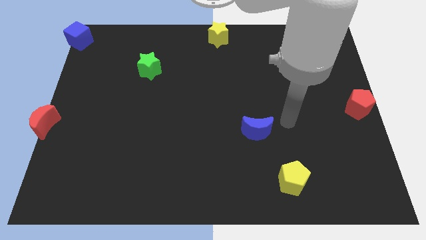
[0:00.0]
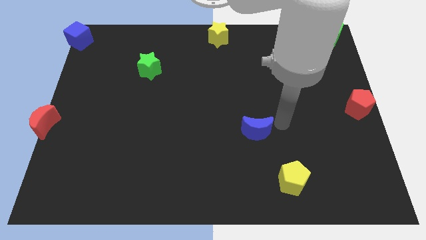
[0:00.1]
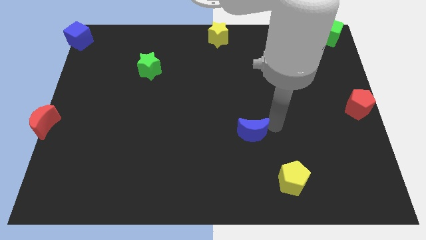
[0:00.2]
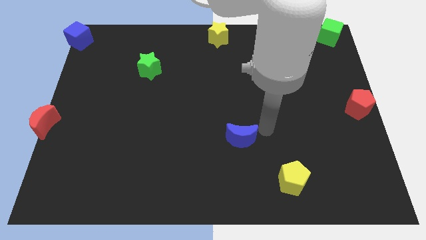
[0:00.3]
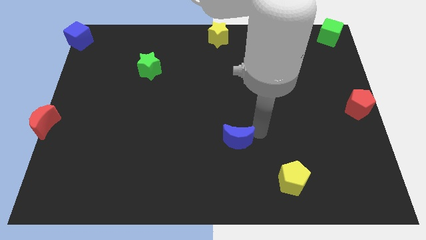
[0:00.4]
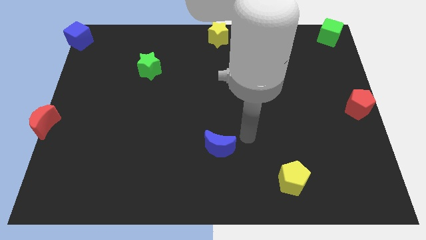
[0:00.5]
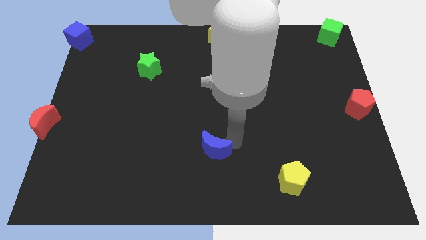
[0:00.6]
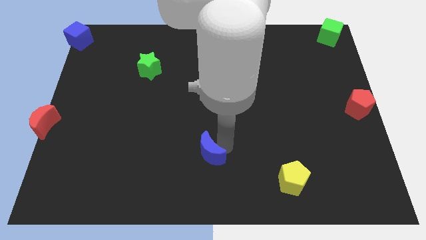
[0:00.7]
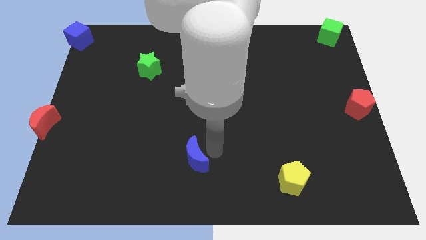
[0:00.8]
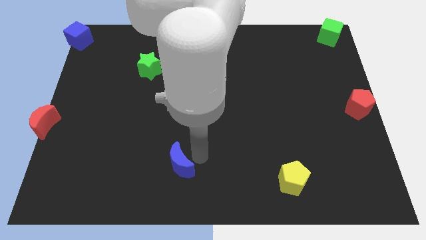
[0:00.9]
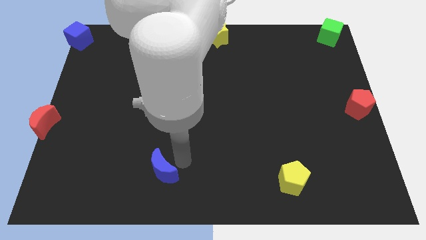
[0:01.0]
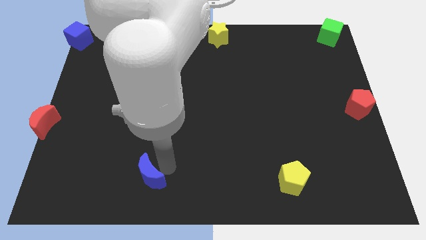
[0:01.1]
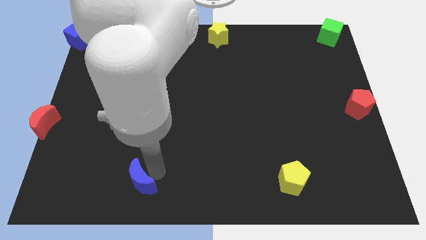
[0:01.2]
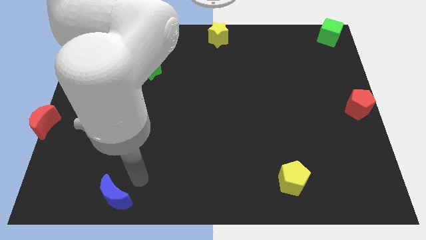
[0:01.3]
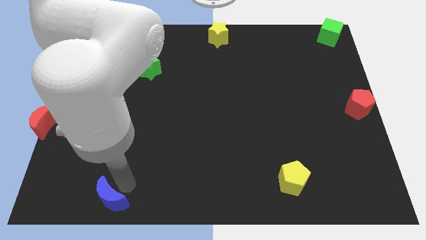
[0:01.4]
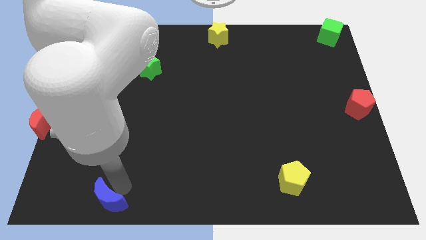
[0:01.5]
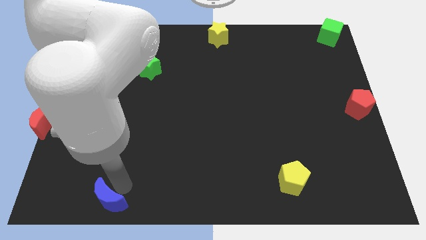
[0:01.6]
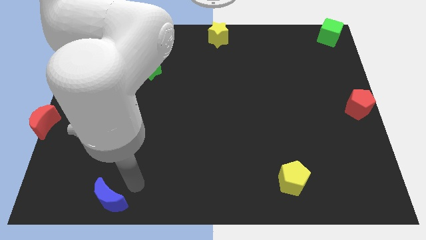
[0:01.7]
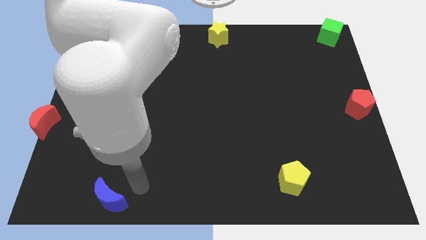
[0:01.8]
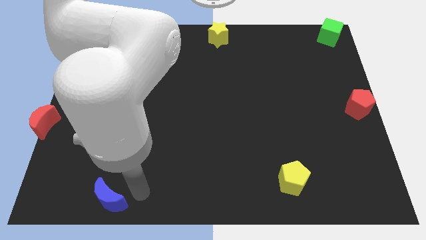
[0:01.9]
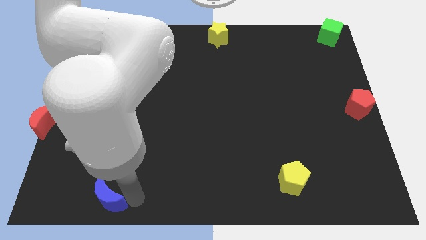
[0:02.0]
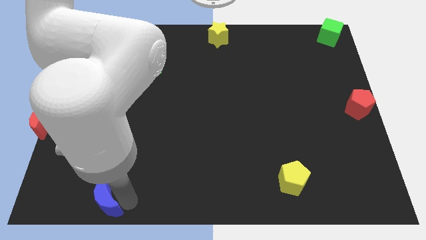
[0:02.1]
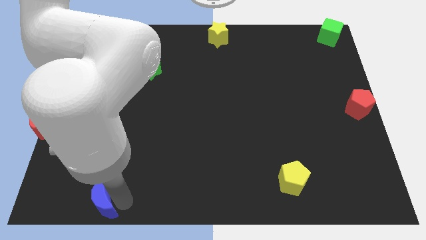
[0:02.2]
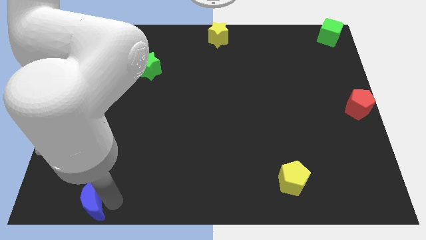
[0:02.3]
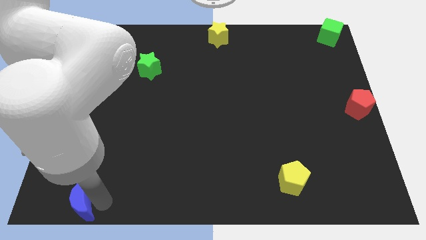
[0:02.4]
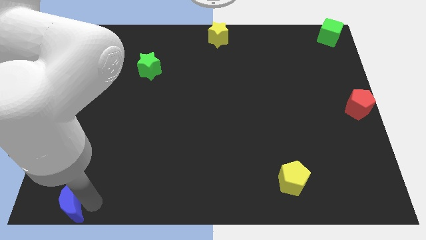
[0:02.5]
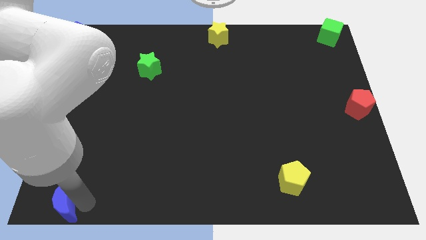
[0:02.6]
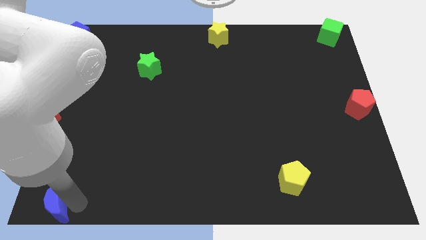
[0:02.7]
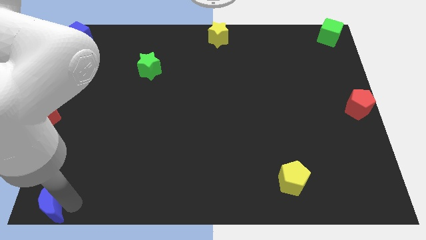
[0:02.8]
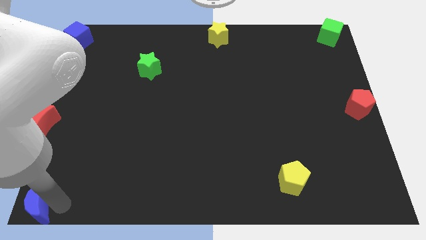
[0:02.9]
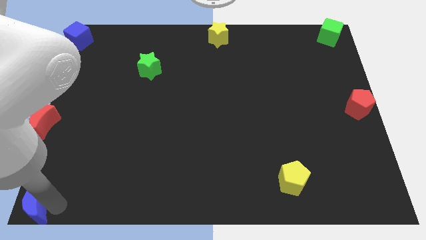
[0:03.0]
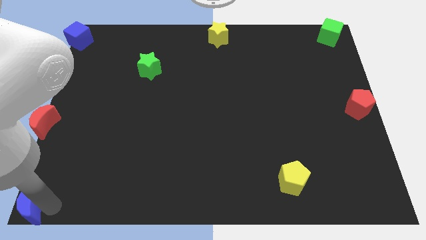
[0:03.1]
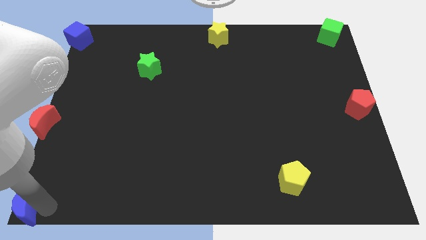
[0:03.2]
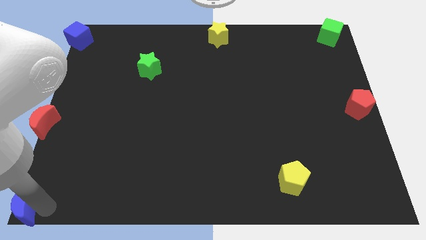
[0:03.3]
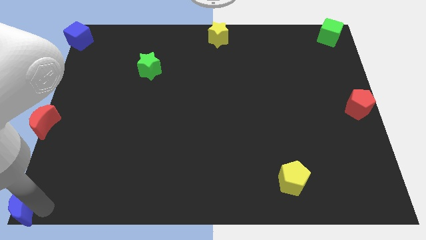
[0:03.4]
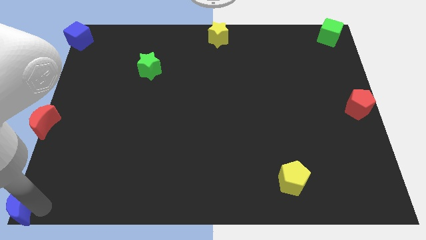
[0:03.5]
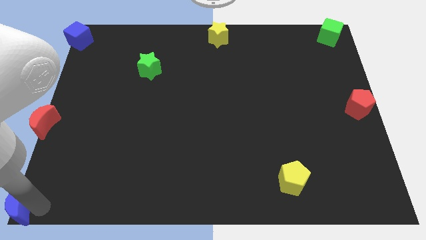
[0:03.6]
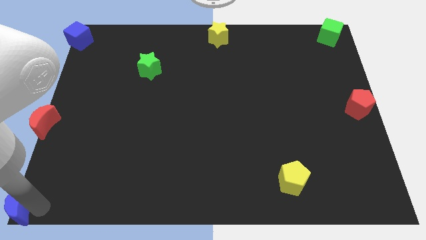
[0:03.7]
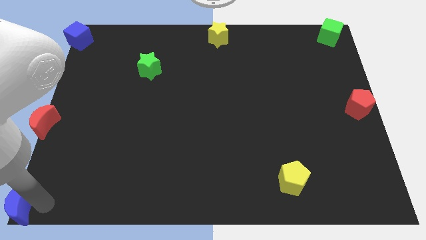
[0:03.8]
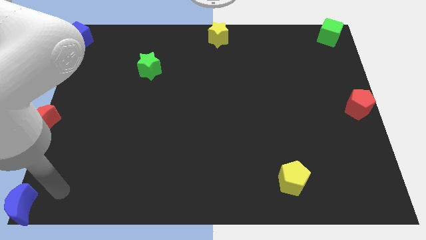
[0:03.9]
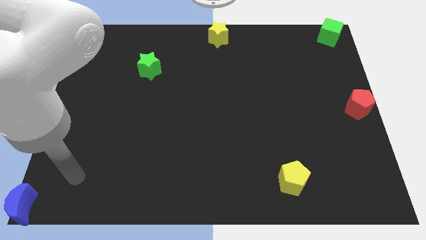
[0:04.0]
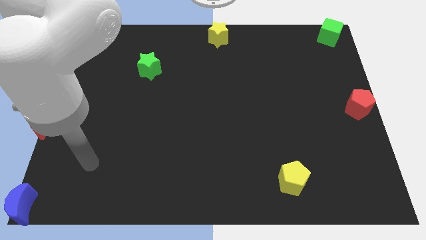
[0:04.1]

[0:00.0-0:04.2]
move the blue semicircle to the left corner of the board

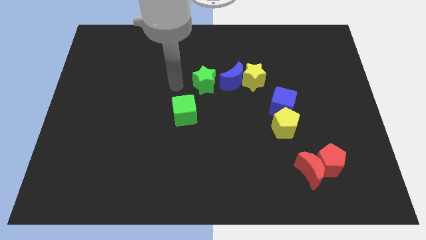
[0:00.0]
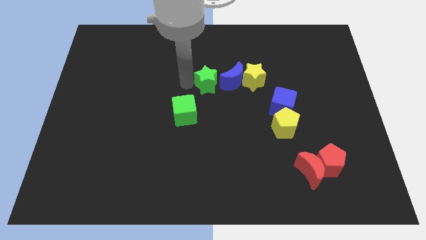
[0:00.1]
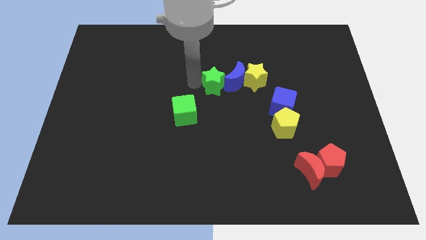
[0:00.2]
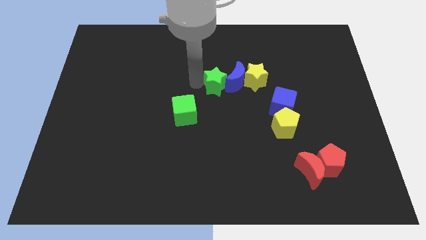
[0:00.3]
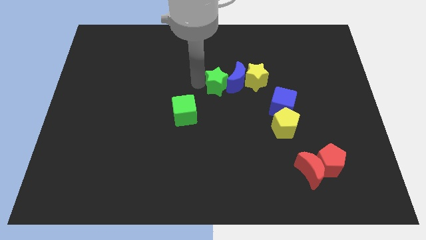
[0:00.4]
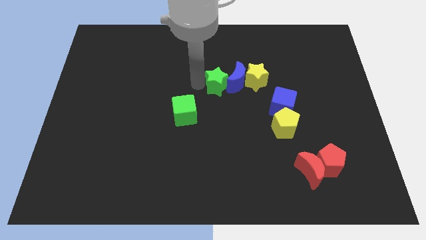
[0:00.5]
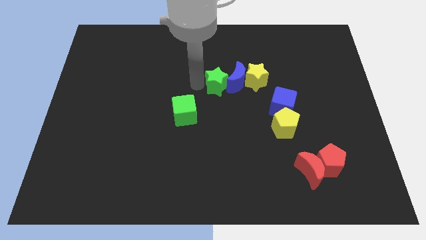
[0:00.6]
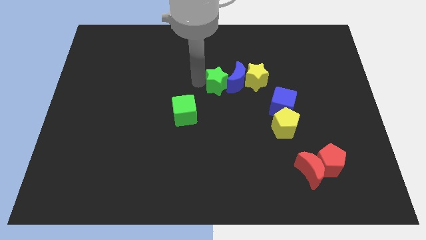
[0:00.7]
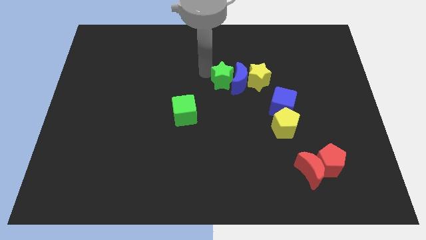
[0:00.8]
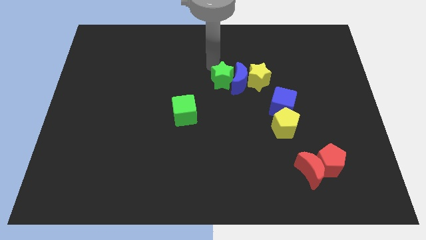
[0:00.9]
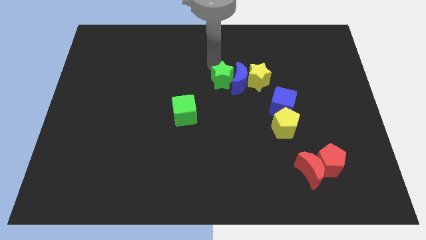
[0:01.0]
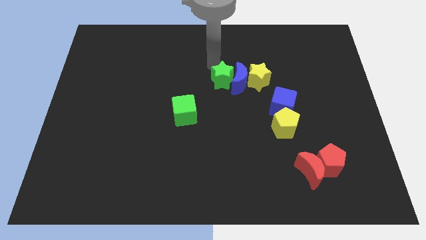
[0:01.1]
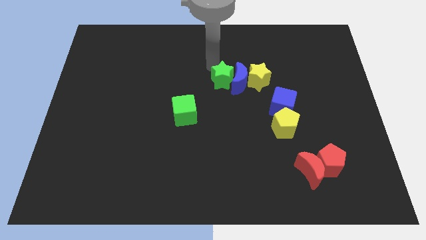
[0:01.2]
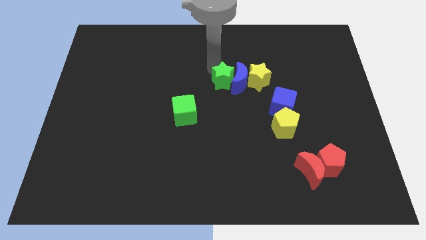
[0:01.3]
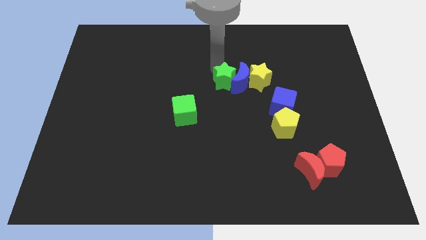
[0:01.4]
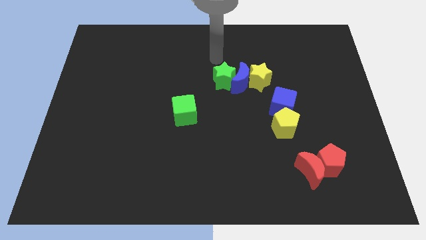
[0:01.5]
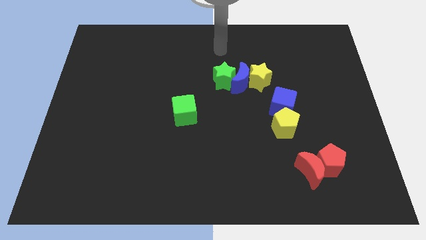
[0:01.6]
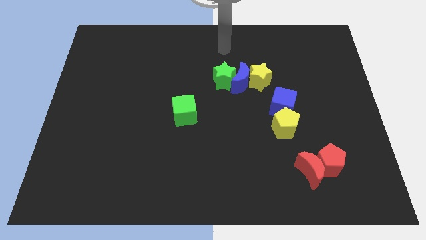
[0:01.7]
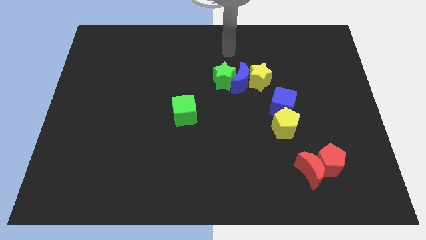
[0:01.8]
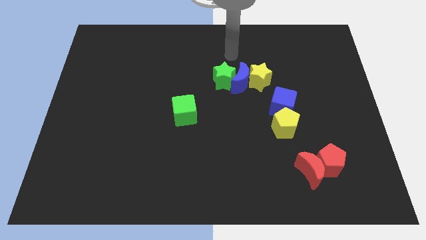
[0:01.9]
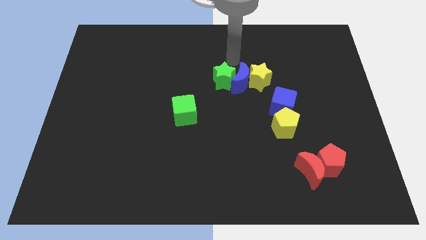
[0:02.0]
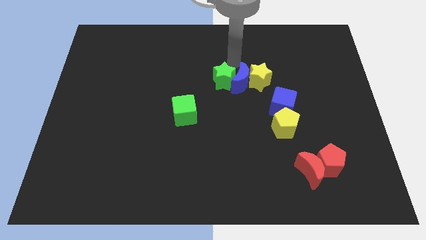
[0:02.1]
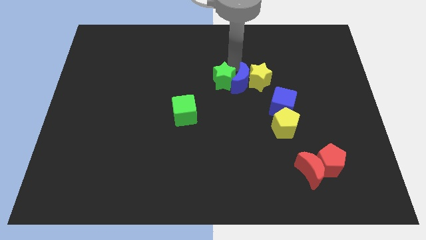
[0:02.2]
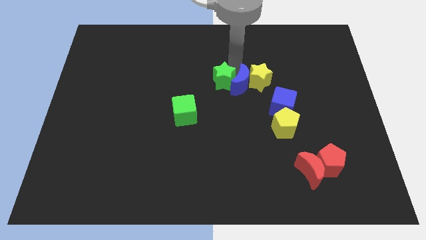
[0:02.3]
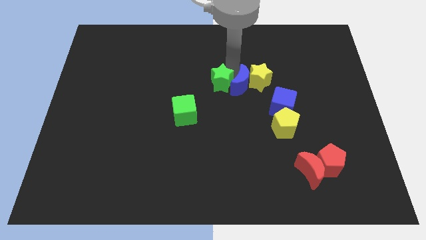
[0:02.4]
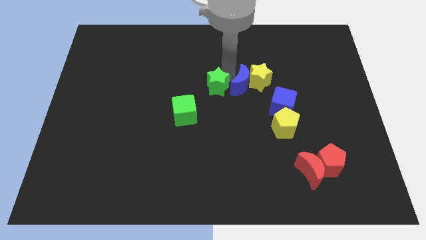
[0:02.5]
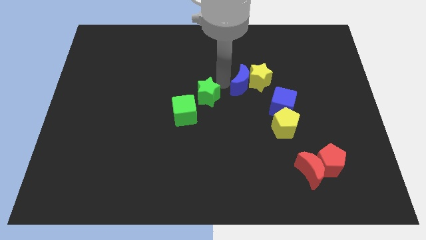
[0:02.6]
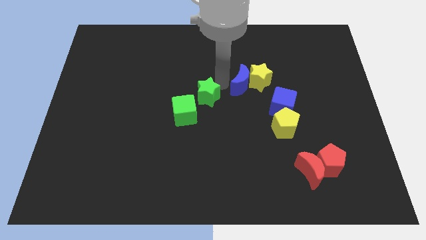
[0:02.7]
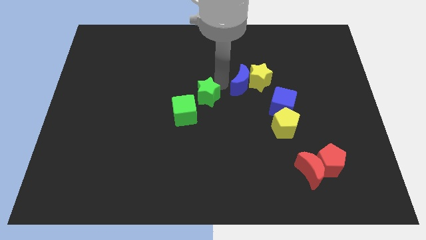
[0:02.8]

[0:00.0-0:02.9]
push green star into the blue moon and yellow star

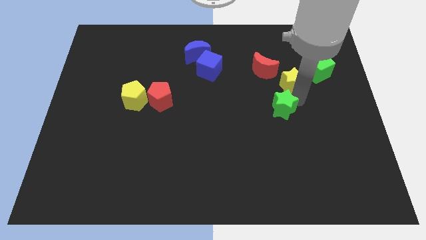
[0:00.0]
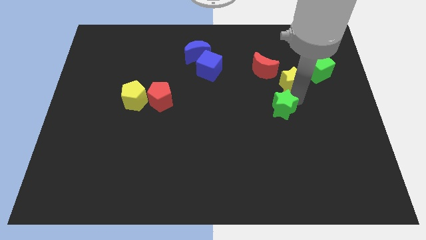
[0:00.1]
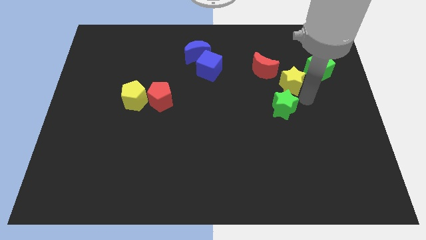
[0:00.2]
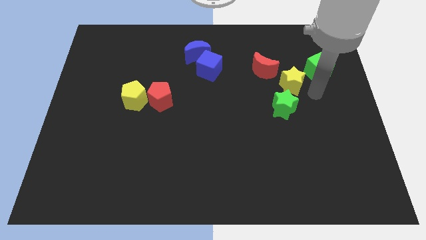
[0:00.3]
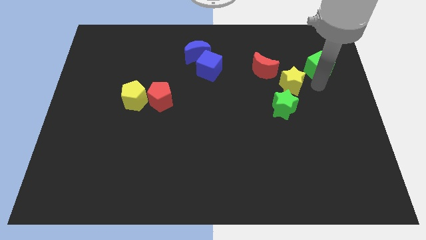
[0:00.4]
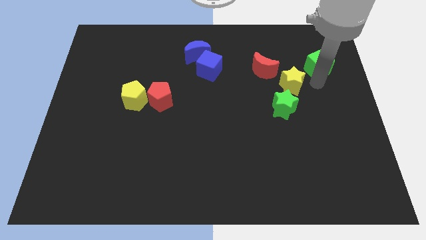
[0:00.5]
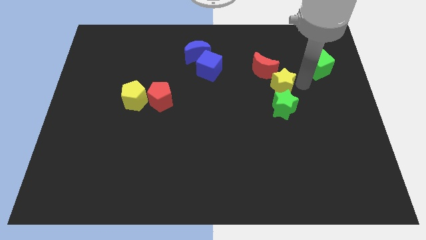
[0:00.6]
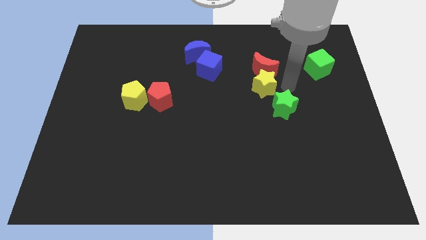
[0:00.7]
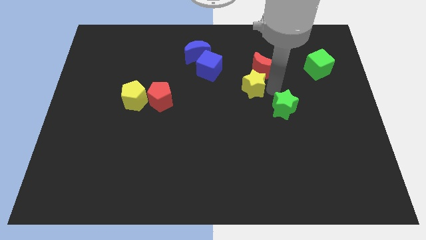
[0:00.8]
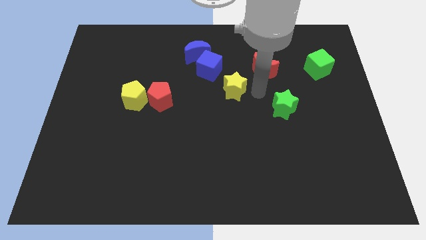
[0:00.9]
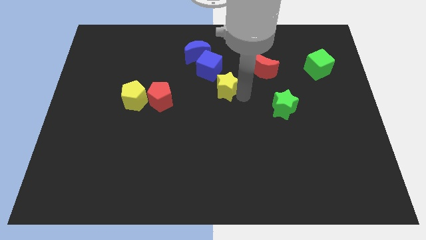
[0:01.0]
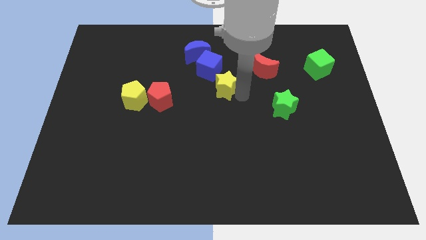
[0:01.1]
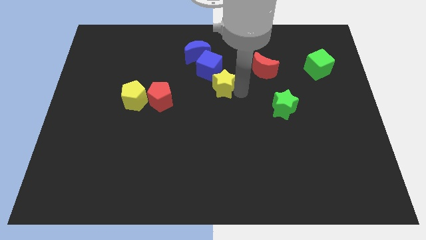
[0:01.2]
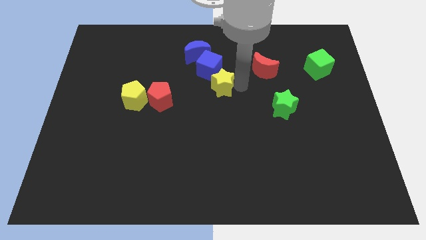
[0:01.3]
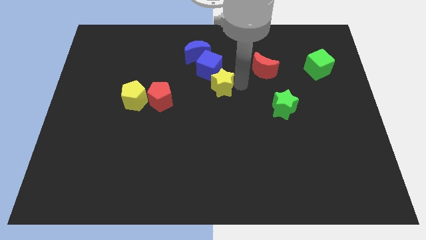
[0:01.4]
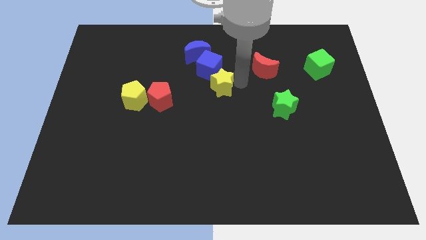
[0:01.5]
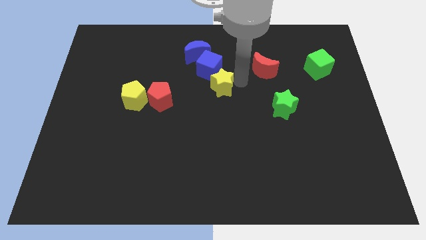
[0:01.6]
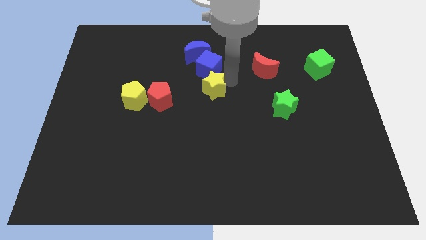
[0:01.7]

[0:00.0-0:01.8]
move the yellow star below the blue cube
